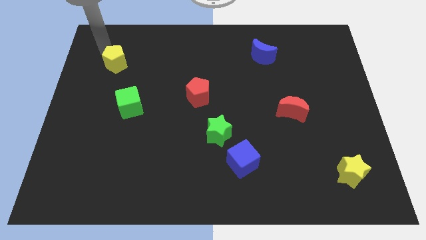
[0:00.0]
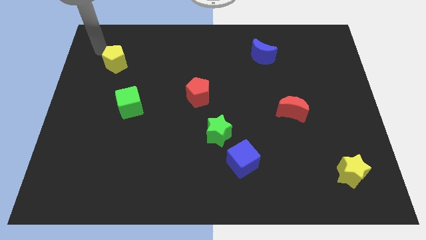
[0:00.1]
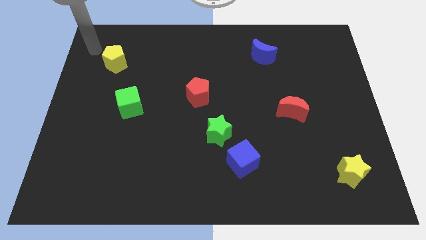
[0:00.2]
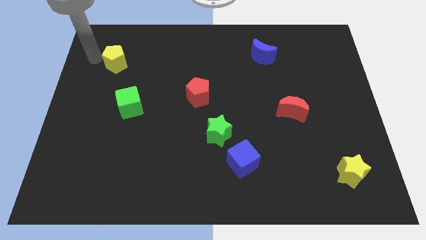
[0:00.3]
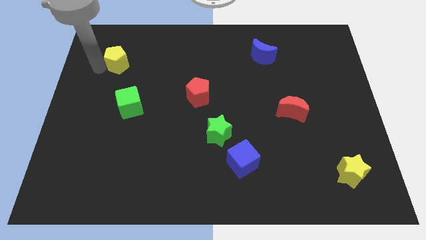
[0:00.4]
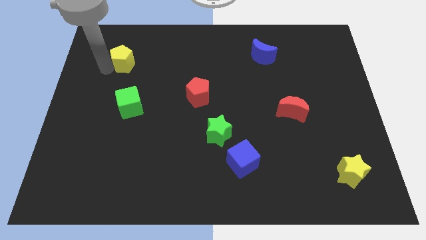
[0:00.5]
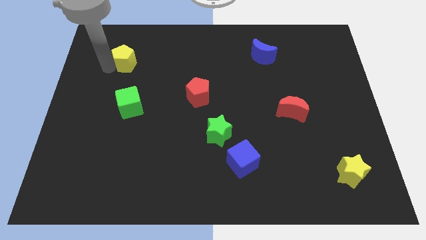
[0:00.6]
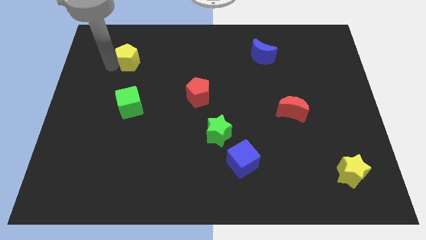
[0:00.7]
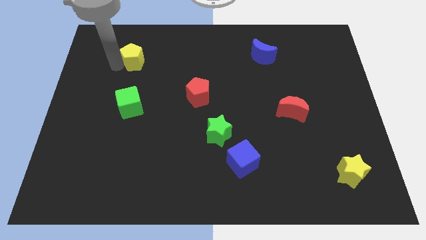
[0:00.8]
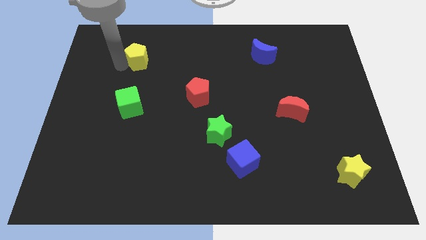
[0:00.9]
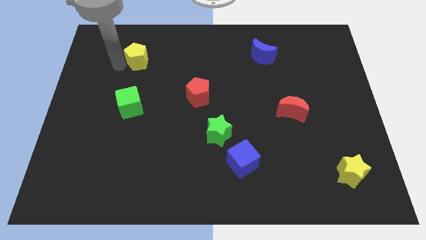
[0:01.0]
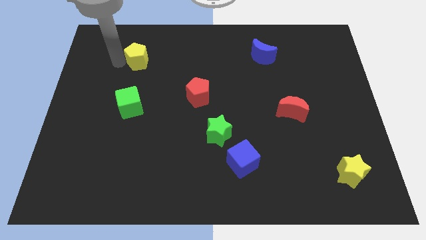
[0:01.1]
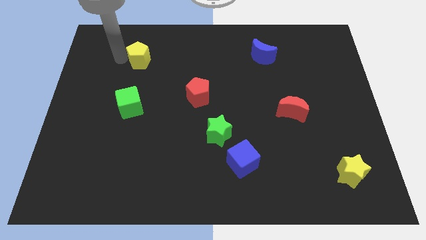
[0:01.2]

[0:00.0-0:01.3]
put the yellow pentagon vertically above the green cube

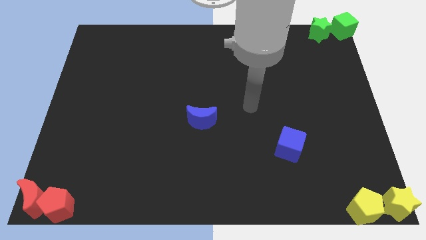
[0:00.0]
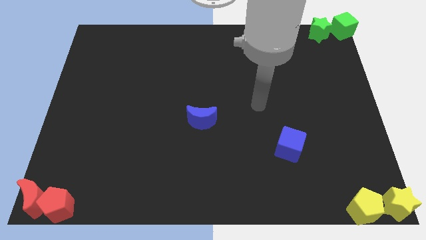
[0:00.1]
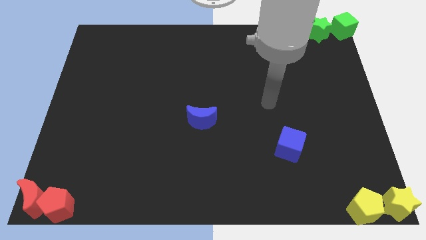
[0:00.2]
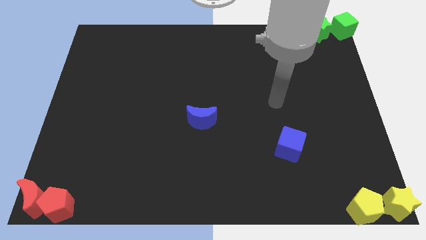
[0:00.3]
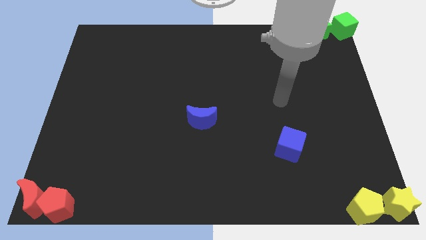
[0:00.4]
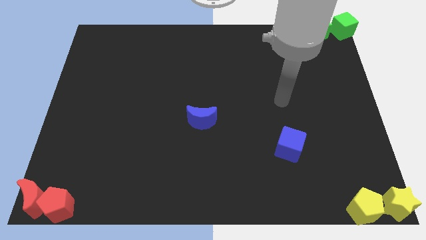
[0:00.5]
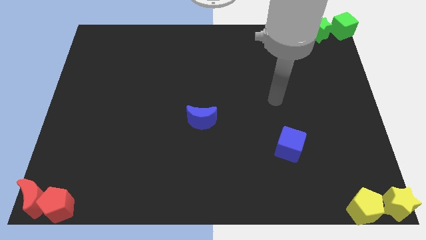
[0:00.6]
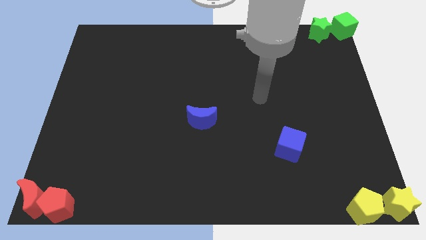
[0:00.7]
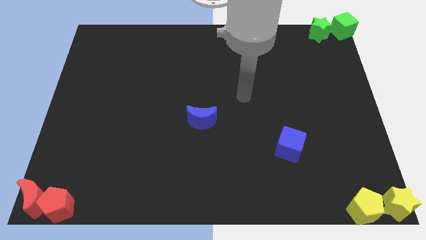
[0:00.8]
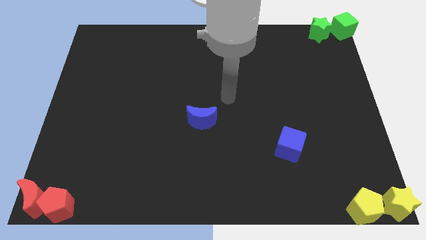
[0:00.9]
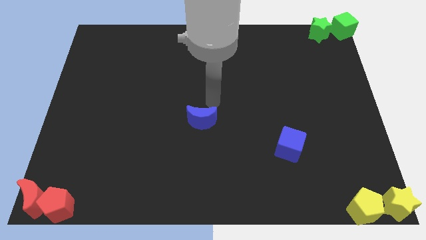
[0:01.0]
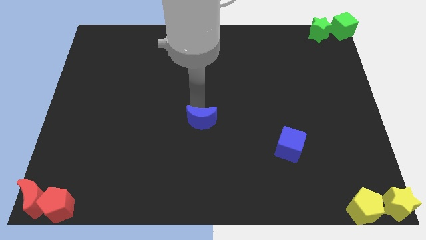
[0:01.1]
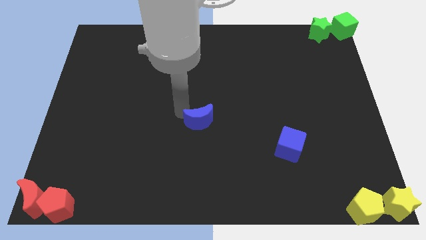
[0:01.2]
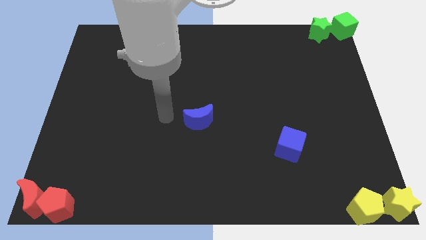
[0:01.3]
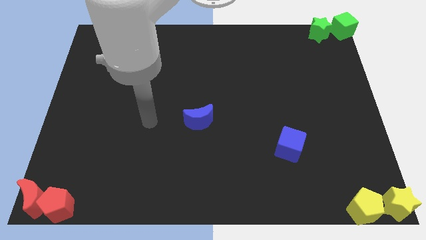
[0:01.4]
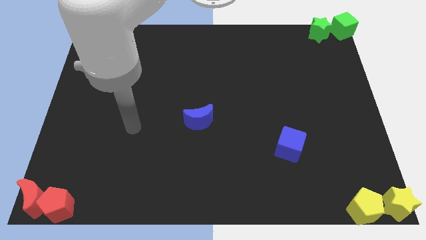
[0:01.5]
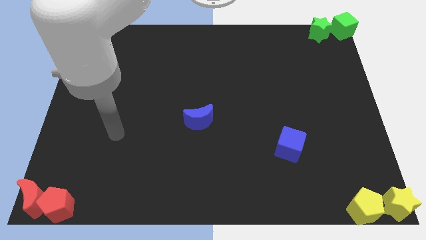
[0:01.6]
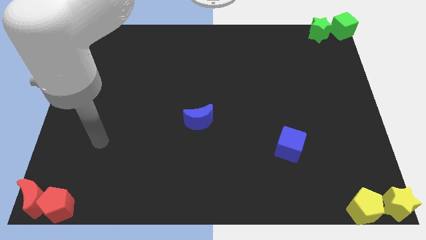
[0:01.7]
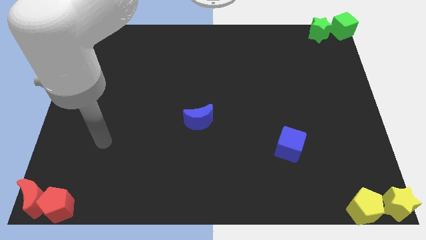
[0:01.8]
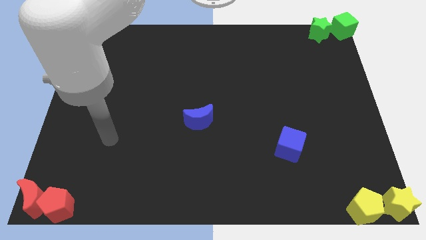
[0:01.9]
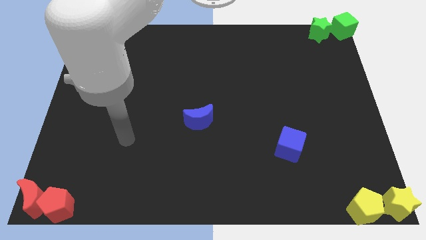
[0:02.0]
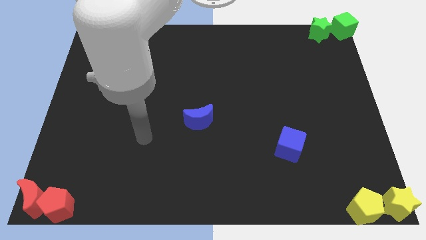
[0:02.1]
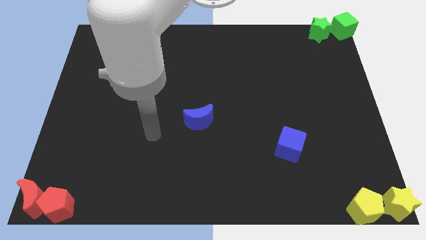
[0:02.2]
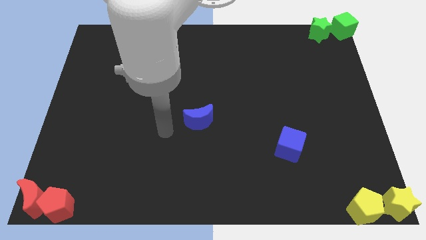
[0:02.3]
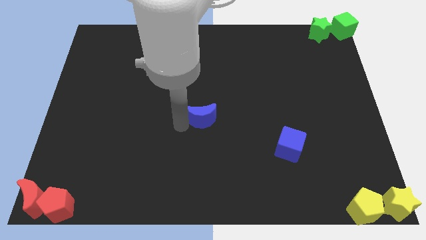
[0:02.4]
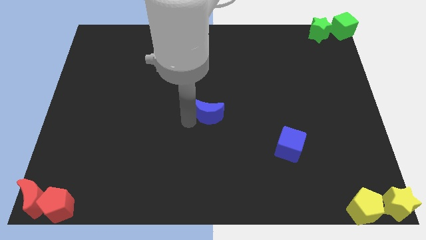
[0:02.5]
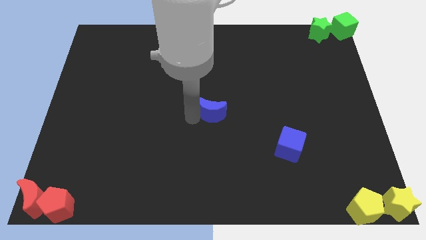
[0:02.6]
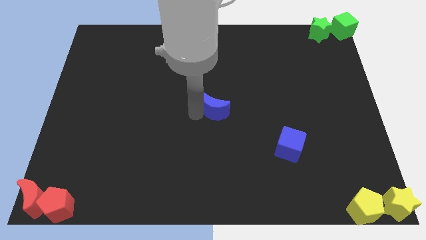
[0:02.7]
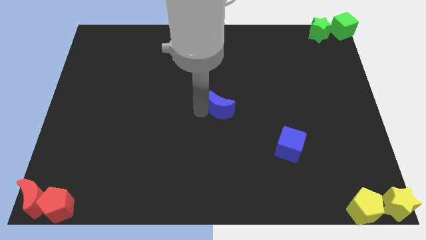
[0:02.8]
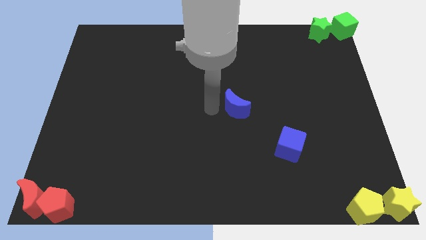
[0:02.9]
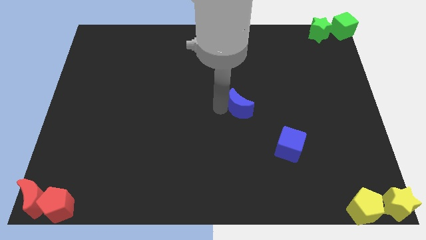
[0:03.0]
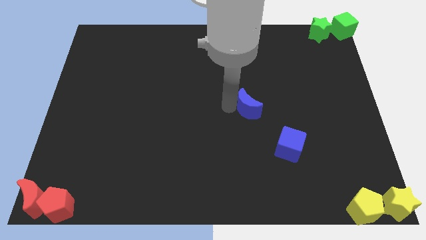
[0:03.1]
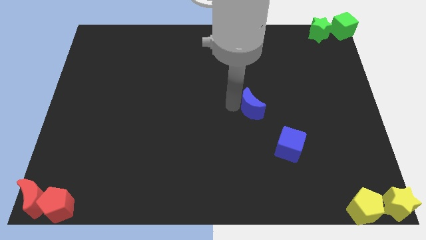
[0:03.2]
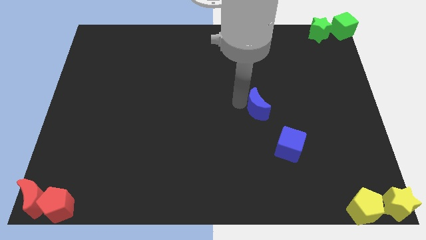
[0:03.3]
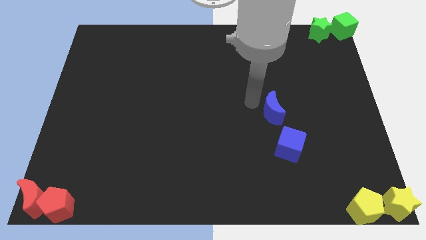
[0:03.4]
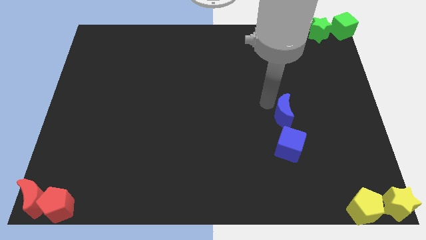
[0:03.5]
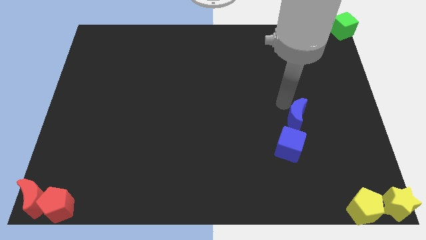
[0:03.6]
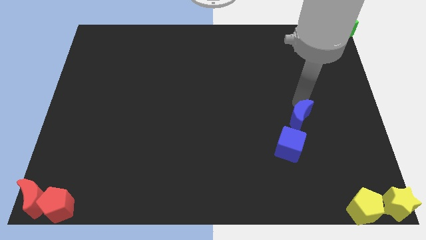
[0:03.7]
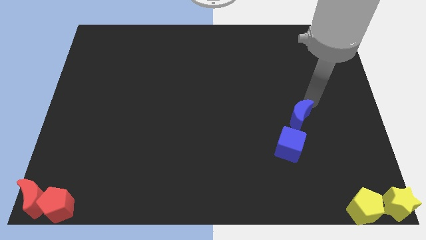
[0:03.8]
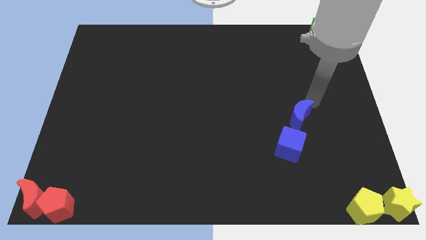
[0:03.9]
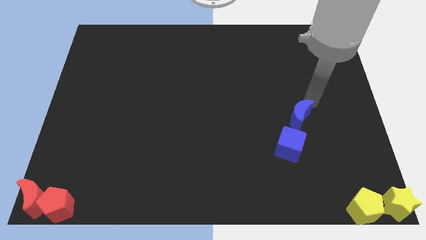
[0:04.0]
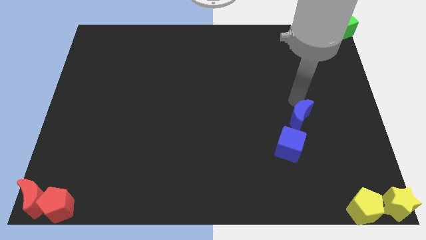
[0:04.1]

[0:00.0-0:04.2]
move the blue crescent to the top of the blue cube

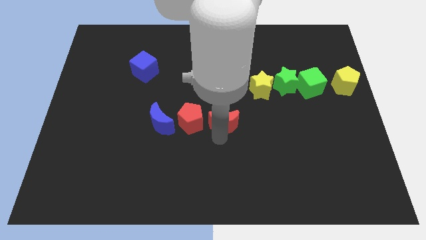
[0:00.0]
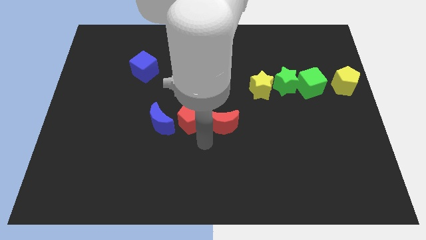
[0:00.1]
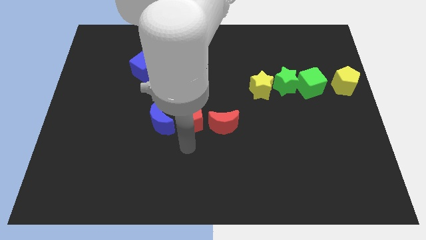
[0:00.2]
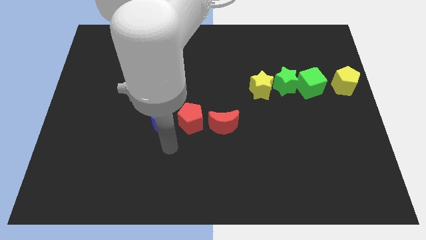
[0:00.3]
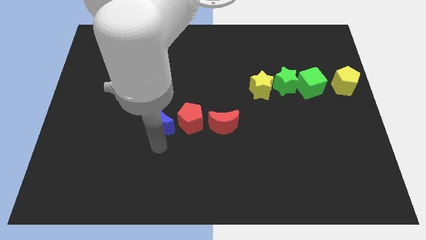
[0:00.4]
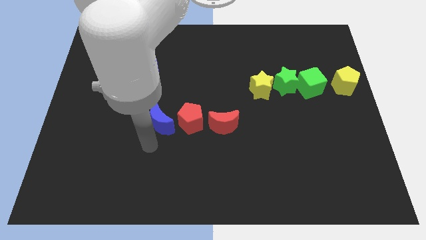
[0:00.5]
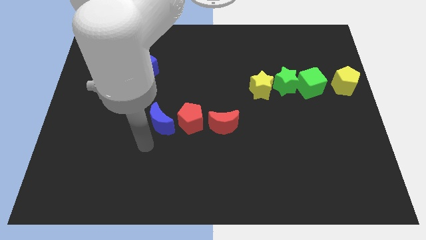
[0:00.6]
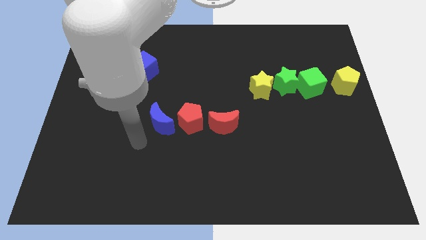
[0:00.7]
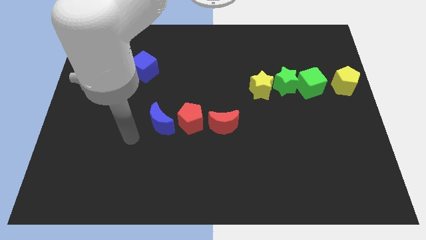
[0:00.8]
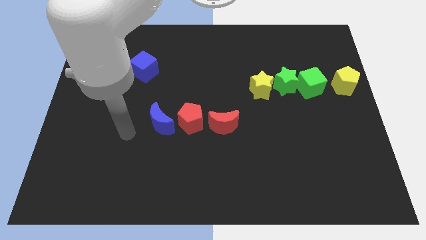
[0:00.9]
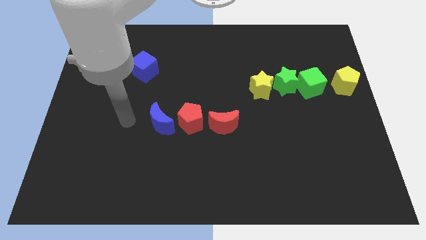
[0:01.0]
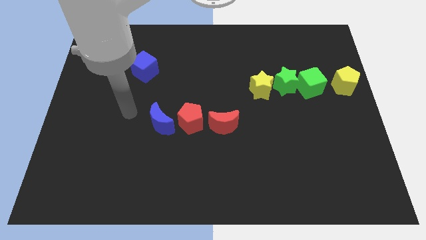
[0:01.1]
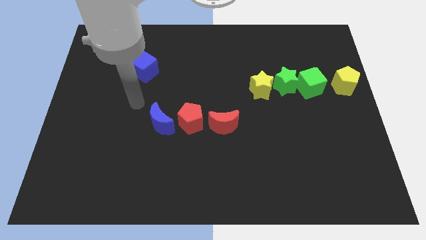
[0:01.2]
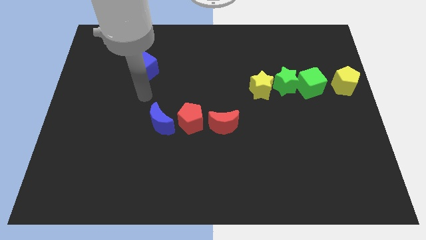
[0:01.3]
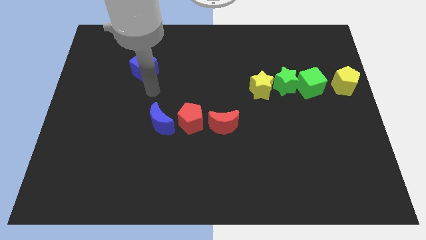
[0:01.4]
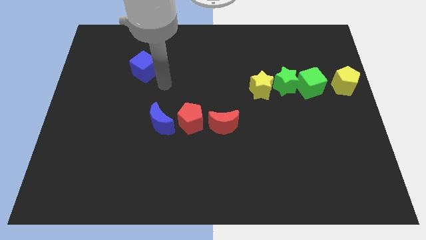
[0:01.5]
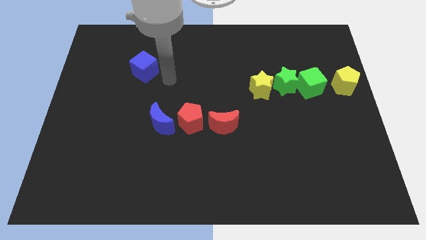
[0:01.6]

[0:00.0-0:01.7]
move arm near blue cube

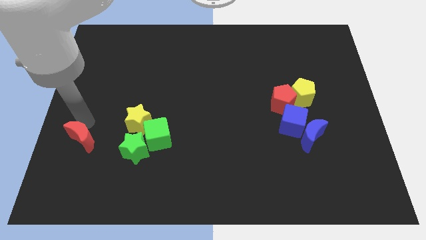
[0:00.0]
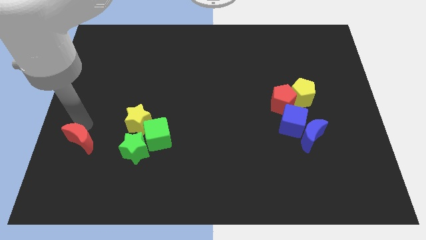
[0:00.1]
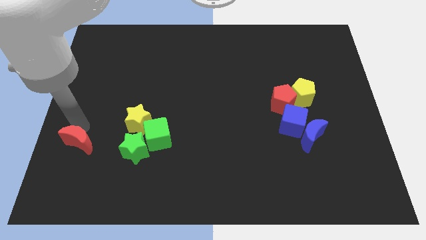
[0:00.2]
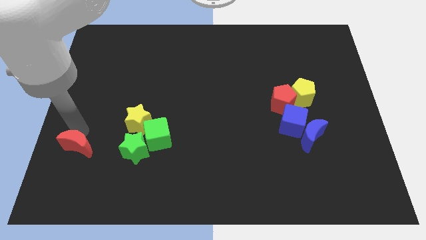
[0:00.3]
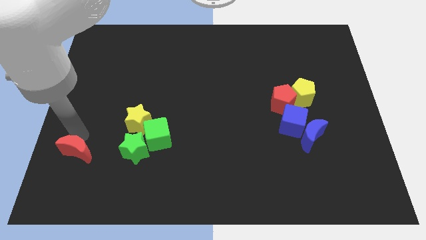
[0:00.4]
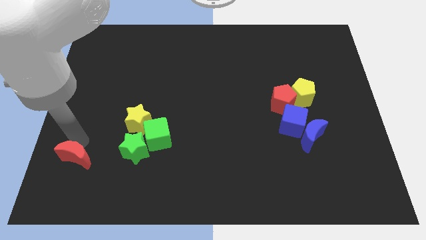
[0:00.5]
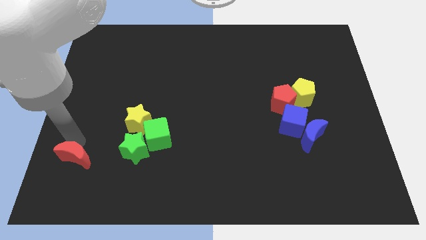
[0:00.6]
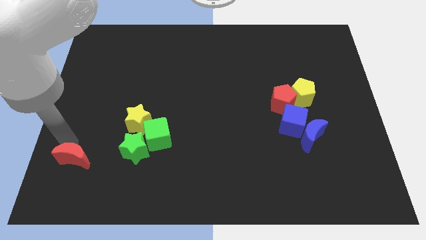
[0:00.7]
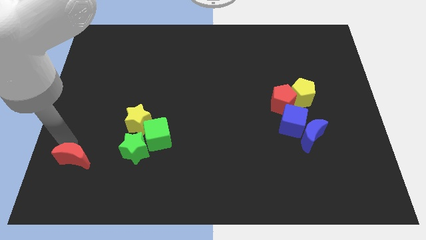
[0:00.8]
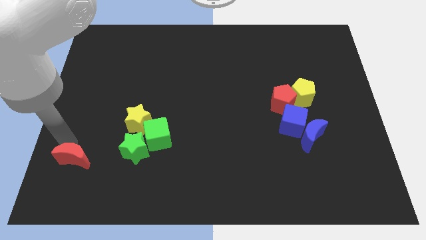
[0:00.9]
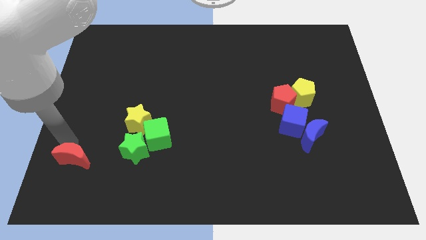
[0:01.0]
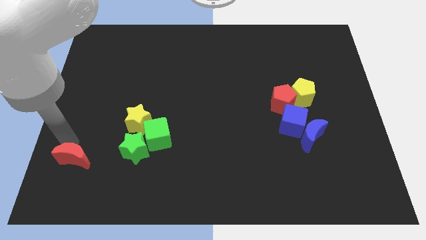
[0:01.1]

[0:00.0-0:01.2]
move red moon towards bottom

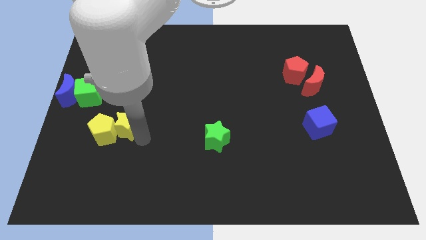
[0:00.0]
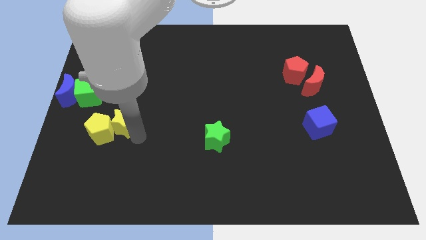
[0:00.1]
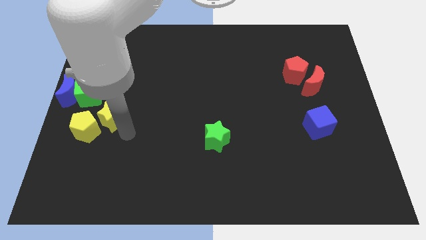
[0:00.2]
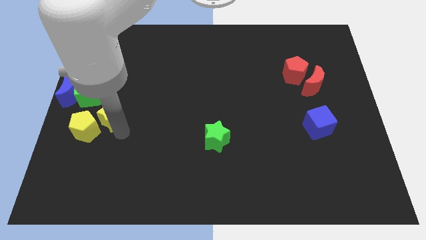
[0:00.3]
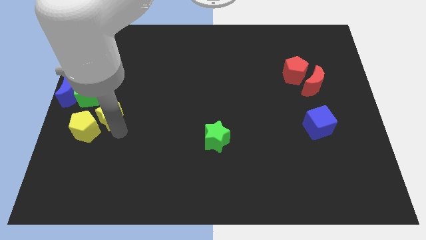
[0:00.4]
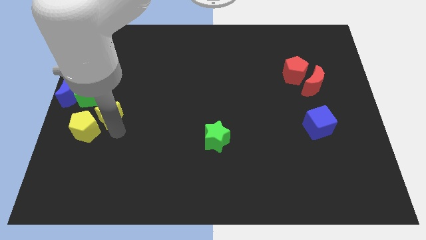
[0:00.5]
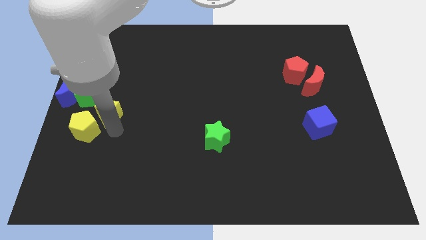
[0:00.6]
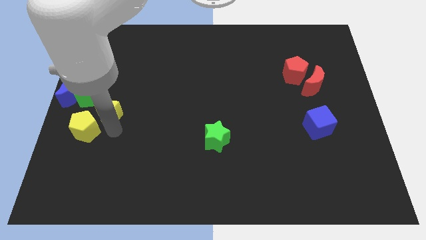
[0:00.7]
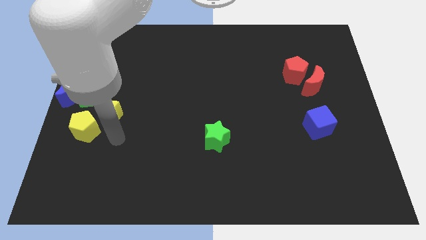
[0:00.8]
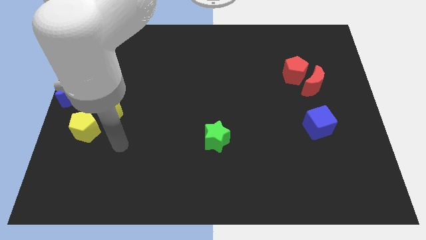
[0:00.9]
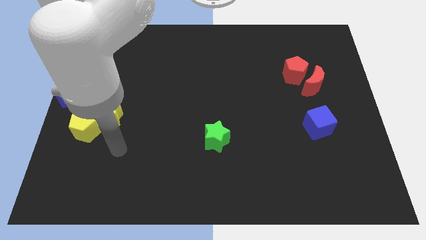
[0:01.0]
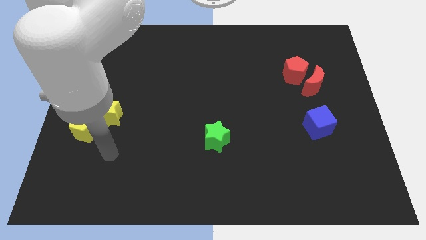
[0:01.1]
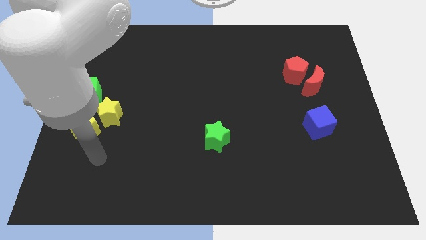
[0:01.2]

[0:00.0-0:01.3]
move the yellow star to the bottom right of the green cube
